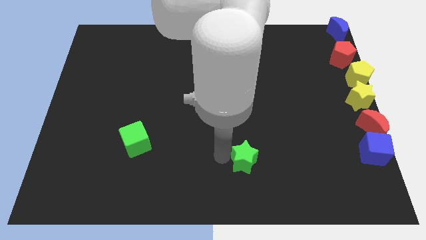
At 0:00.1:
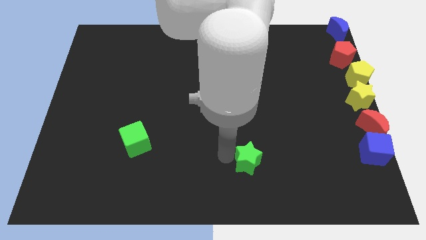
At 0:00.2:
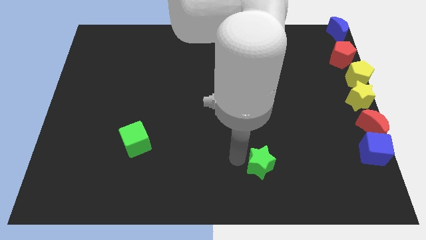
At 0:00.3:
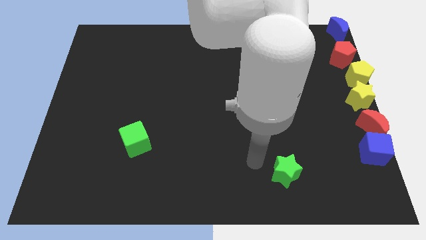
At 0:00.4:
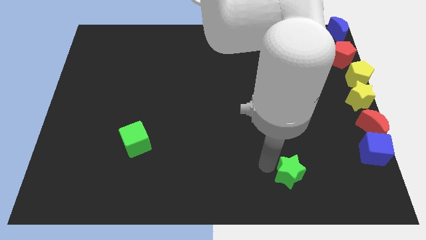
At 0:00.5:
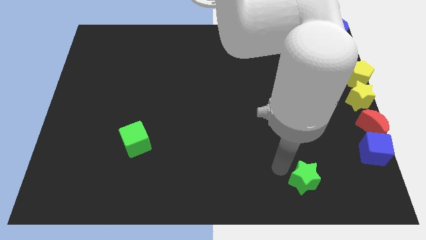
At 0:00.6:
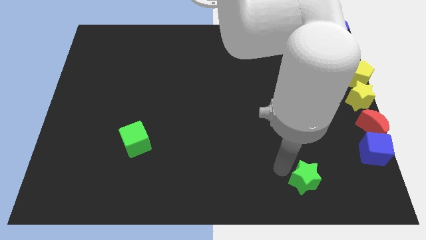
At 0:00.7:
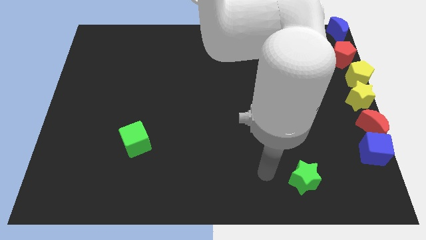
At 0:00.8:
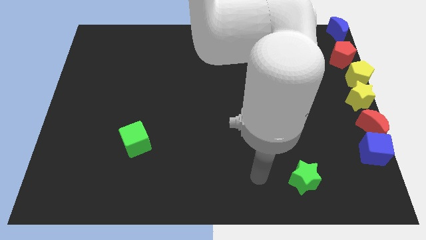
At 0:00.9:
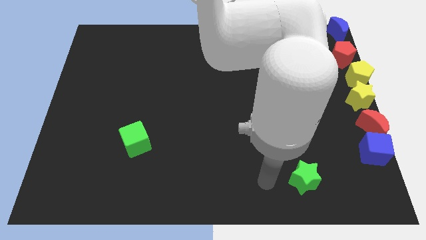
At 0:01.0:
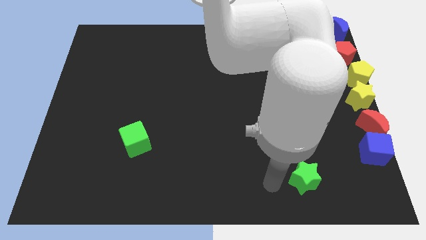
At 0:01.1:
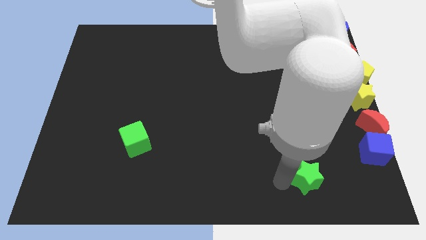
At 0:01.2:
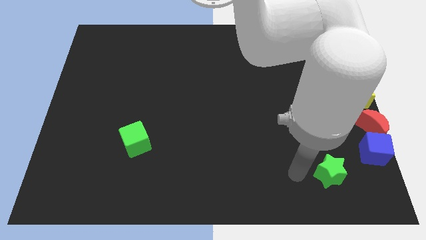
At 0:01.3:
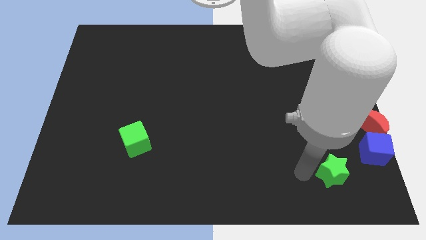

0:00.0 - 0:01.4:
move the green star to the bottom right of the board

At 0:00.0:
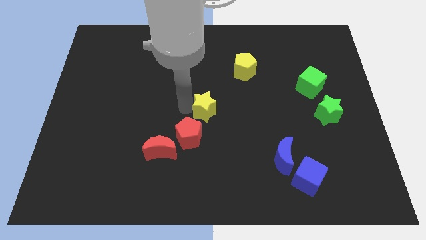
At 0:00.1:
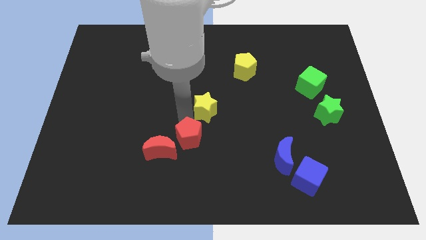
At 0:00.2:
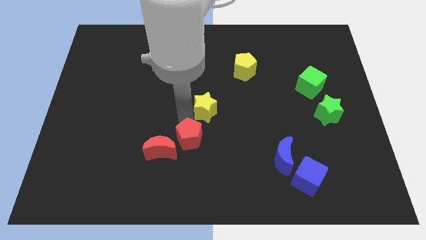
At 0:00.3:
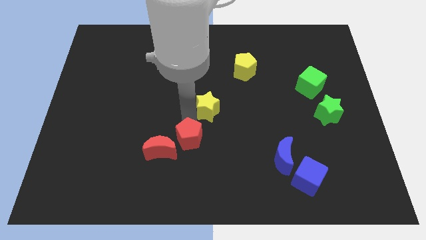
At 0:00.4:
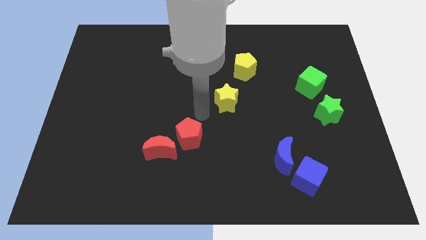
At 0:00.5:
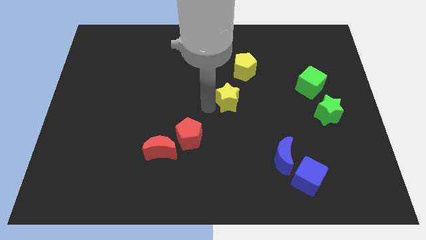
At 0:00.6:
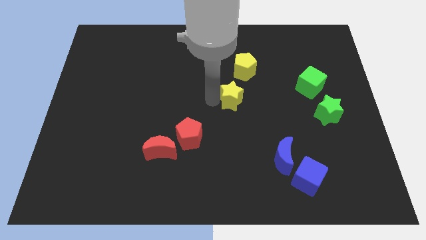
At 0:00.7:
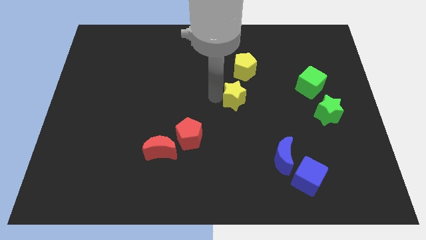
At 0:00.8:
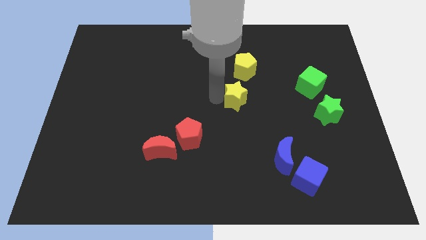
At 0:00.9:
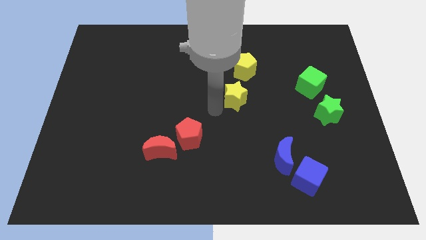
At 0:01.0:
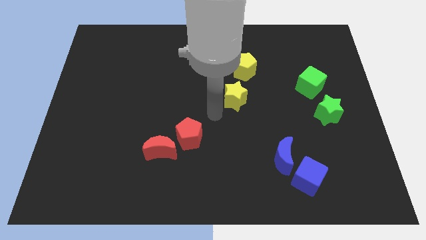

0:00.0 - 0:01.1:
push the yellow star below the yellow pentagon

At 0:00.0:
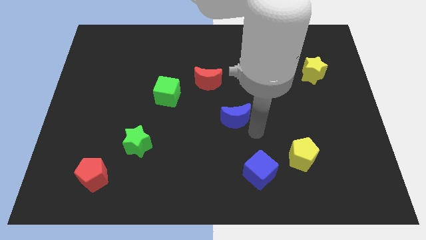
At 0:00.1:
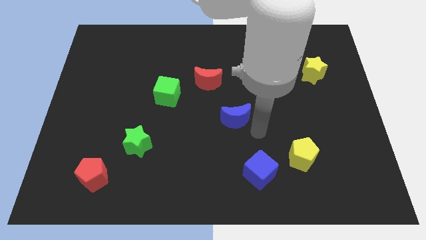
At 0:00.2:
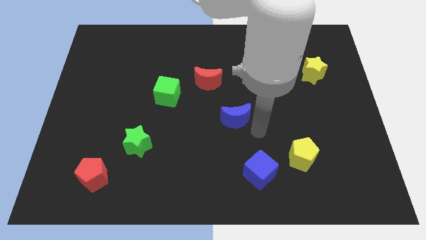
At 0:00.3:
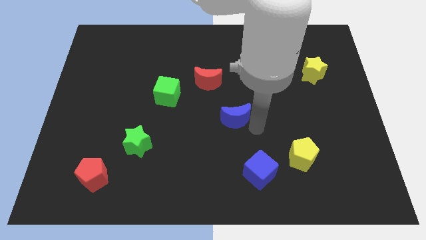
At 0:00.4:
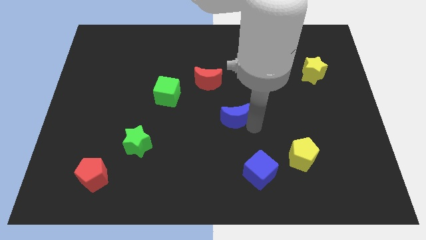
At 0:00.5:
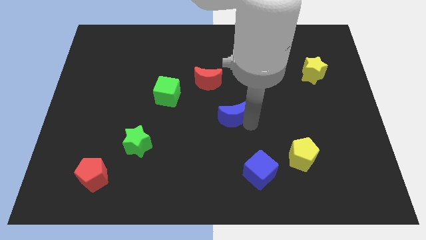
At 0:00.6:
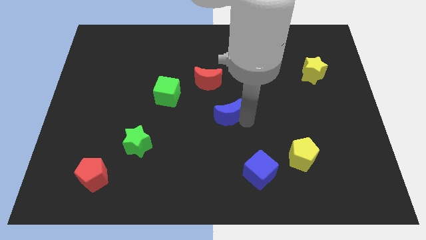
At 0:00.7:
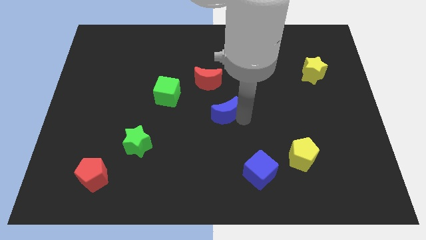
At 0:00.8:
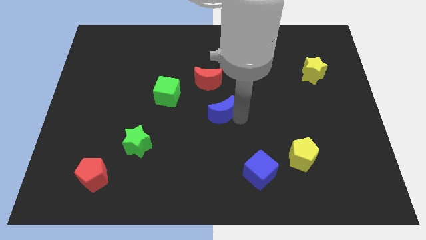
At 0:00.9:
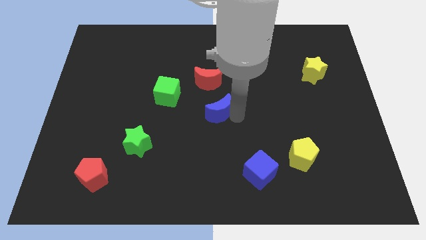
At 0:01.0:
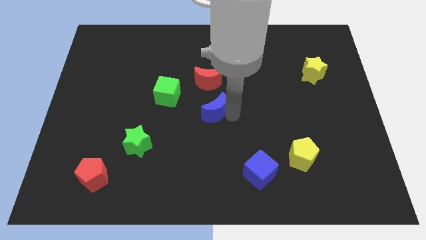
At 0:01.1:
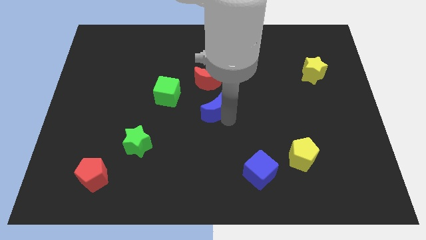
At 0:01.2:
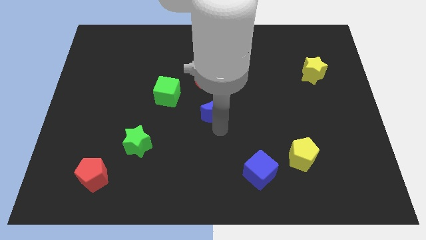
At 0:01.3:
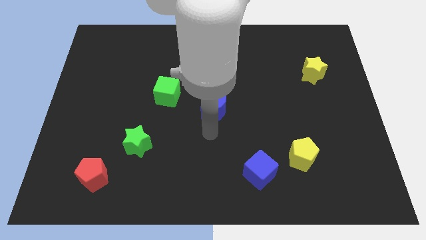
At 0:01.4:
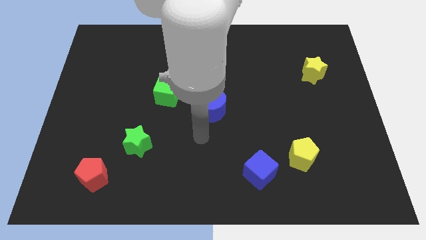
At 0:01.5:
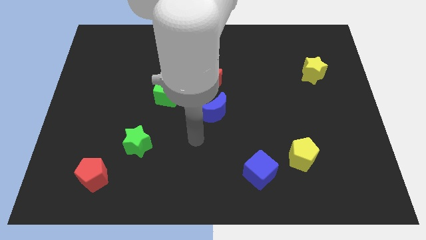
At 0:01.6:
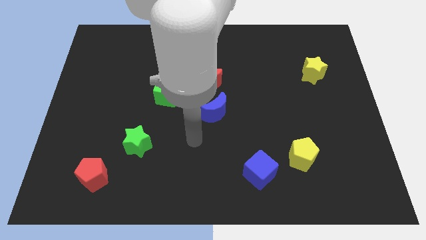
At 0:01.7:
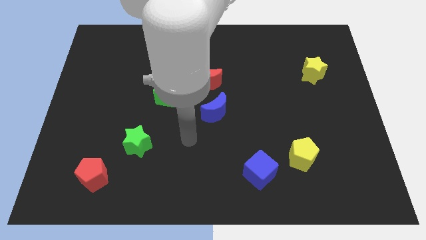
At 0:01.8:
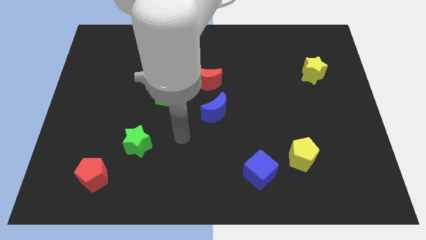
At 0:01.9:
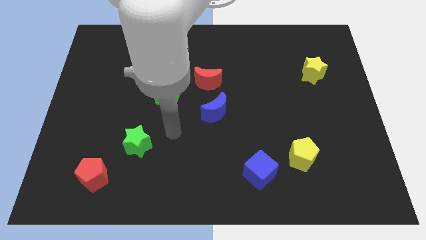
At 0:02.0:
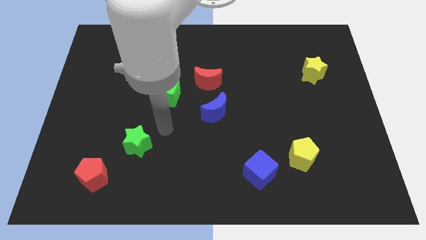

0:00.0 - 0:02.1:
push blue moon to the center of the board

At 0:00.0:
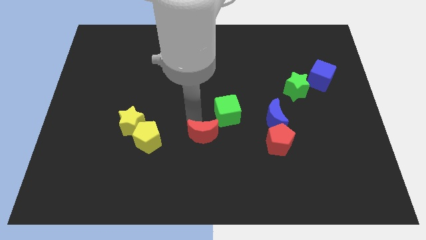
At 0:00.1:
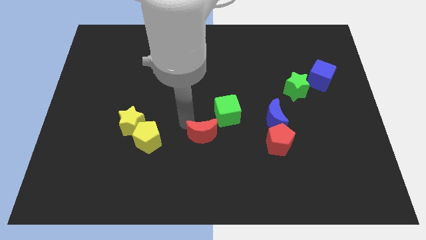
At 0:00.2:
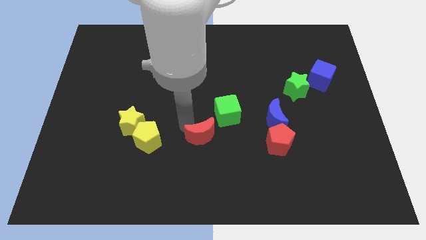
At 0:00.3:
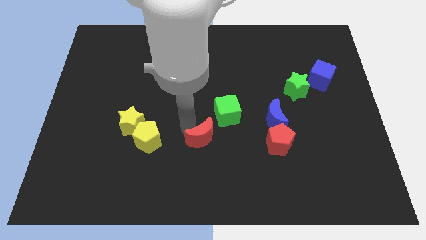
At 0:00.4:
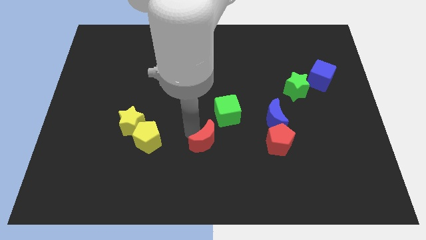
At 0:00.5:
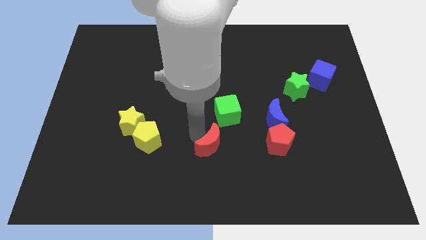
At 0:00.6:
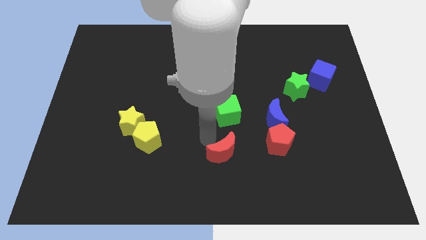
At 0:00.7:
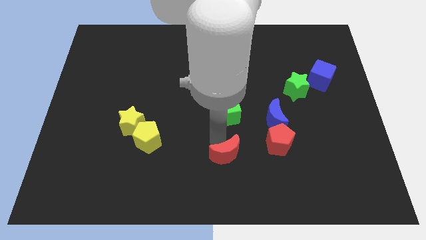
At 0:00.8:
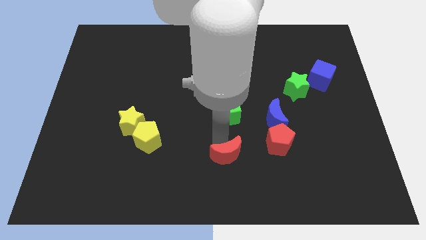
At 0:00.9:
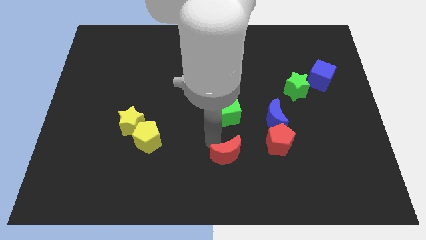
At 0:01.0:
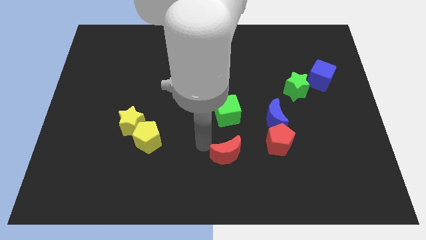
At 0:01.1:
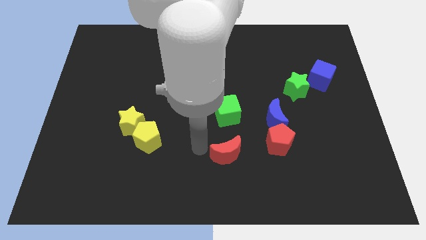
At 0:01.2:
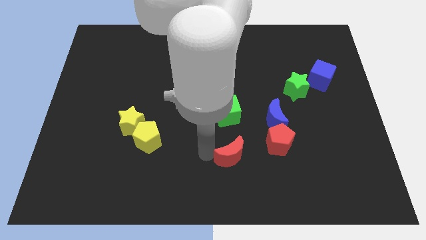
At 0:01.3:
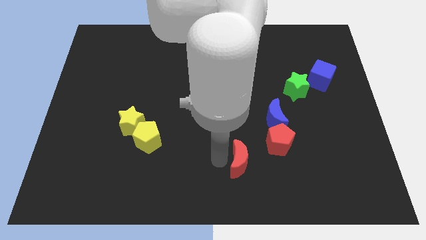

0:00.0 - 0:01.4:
move the red moon below the green cube

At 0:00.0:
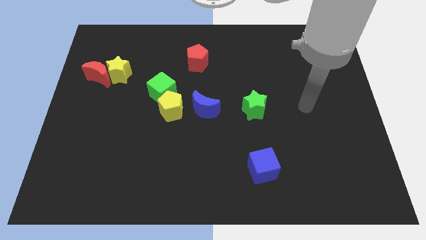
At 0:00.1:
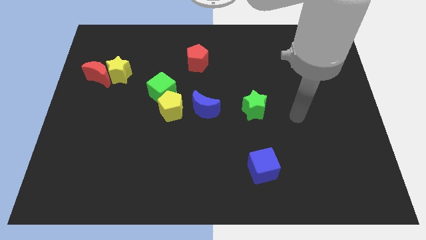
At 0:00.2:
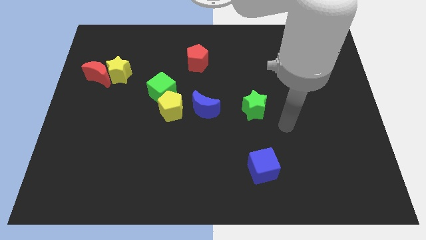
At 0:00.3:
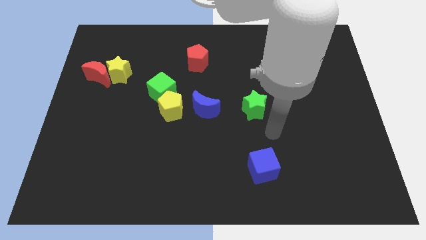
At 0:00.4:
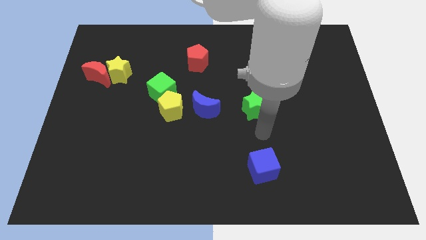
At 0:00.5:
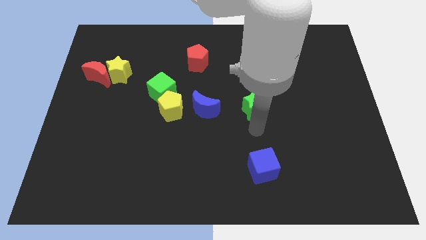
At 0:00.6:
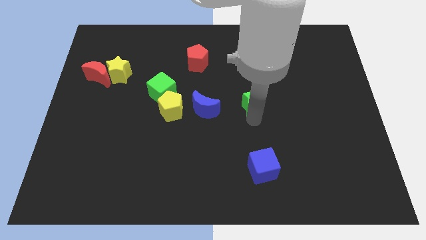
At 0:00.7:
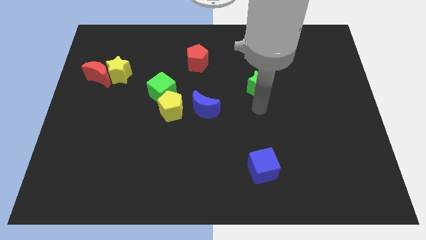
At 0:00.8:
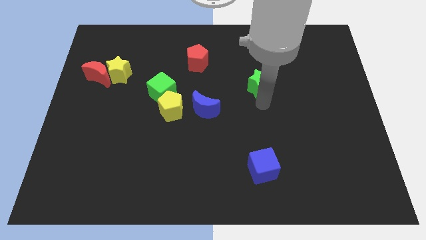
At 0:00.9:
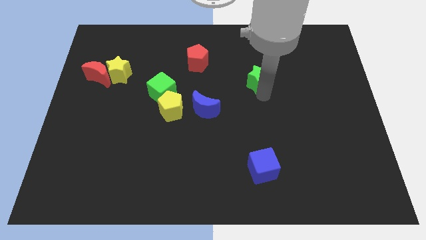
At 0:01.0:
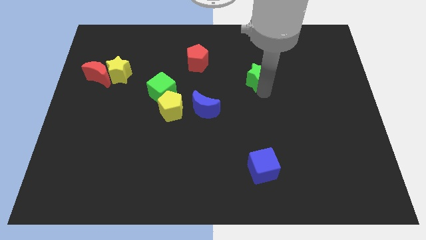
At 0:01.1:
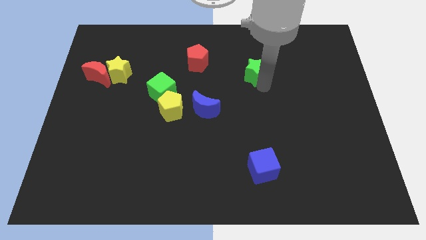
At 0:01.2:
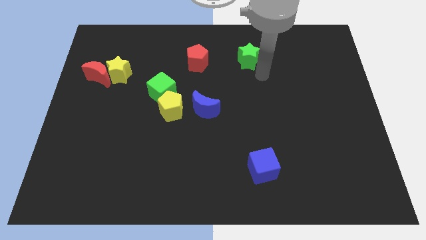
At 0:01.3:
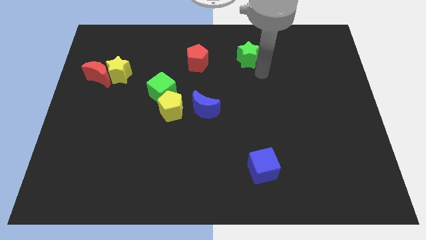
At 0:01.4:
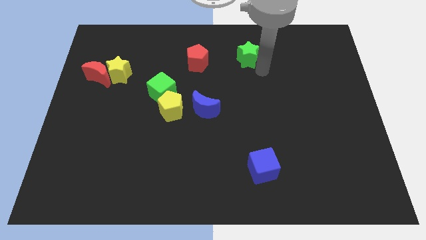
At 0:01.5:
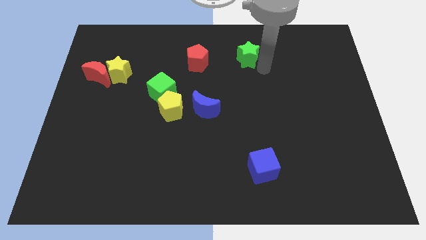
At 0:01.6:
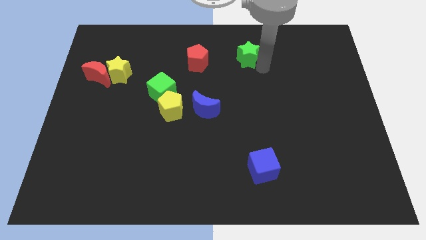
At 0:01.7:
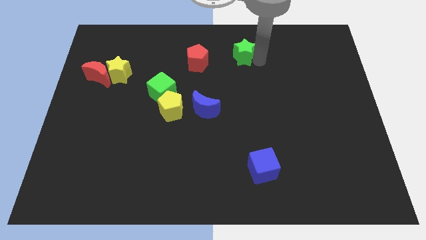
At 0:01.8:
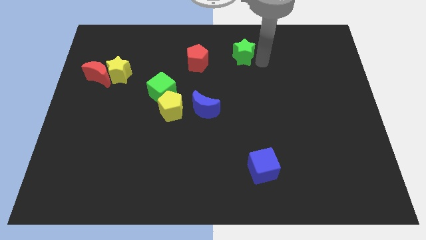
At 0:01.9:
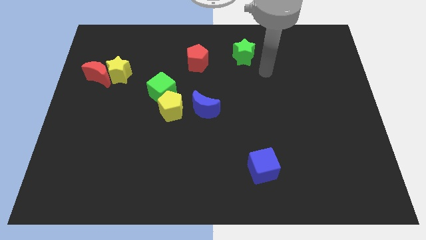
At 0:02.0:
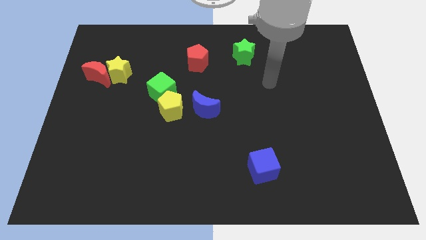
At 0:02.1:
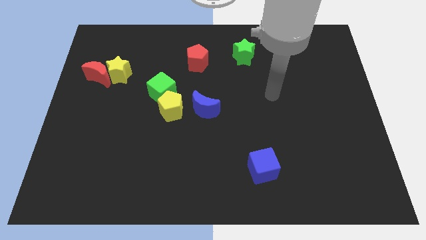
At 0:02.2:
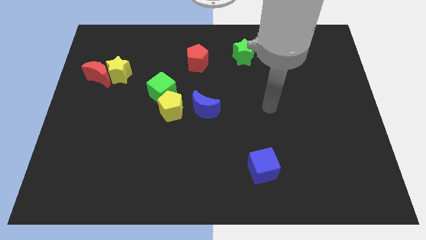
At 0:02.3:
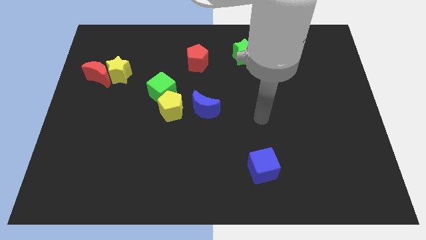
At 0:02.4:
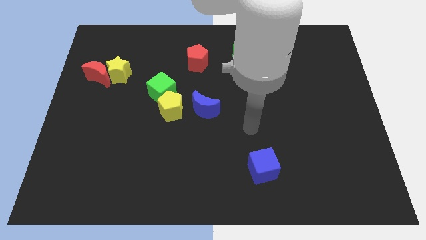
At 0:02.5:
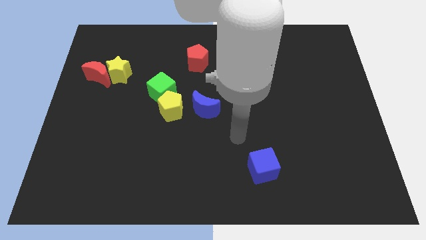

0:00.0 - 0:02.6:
move the green star right to the red pentagon

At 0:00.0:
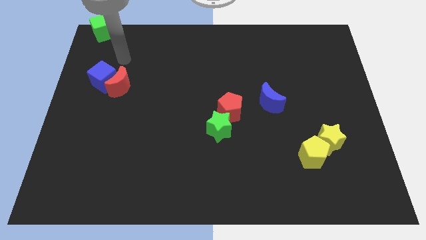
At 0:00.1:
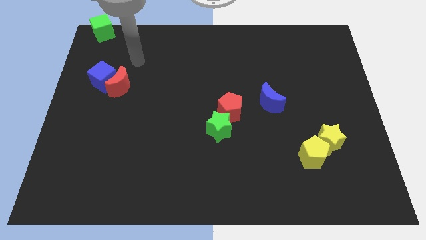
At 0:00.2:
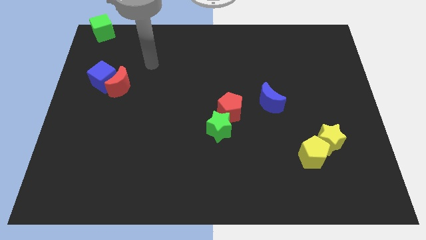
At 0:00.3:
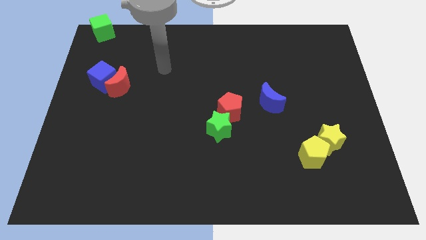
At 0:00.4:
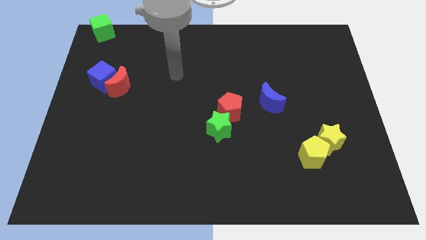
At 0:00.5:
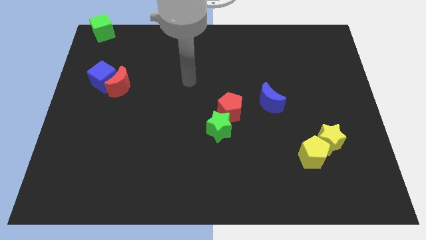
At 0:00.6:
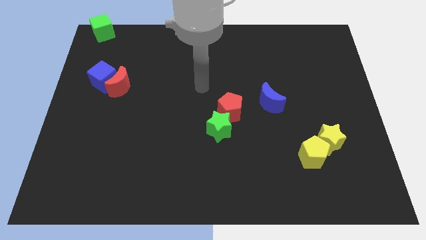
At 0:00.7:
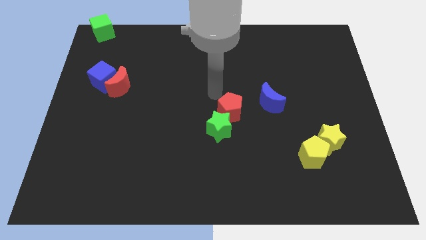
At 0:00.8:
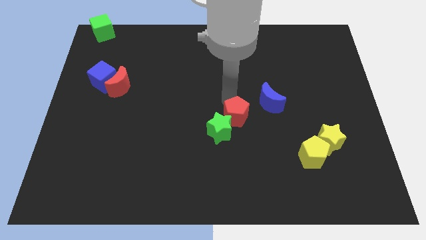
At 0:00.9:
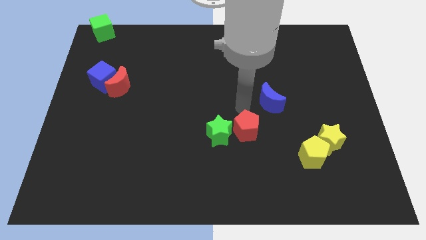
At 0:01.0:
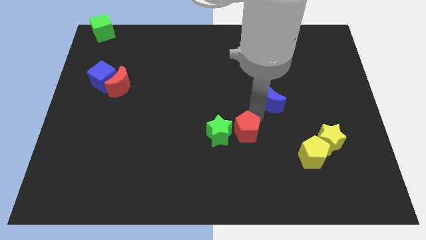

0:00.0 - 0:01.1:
place your arm in between red pentagon and blue moon
